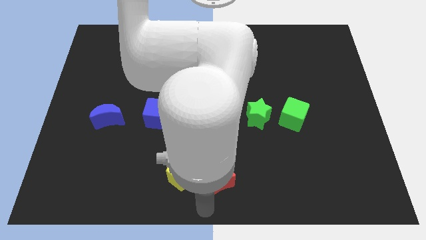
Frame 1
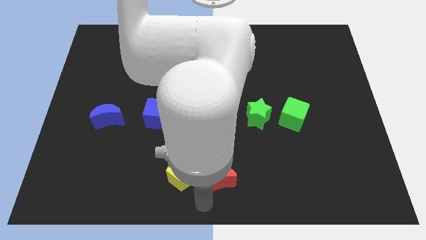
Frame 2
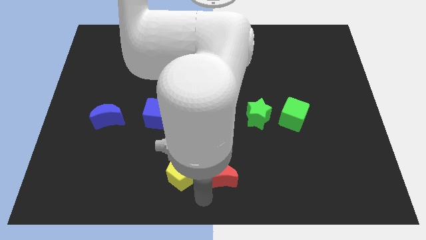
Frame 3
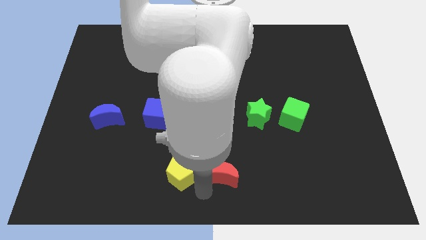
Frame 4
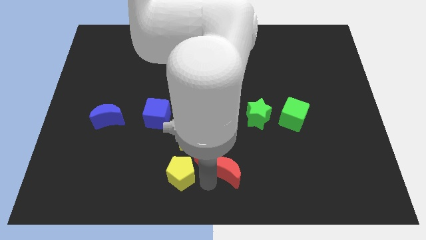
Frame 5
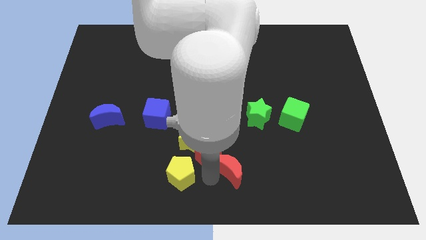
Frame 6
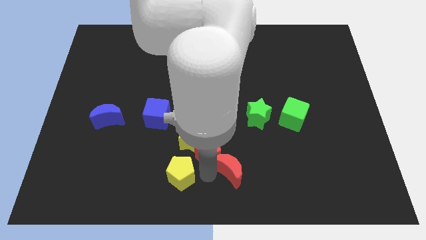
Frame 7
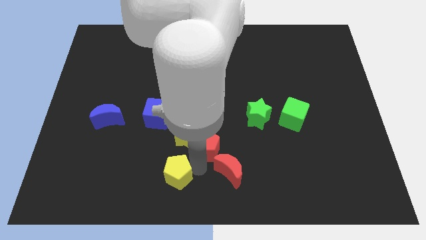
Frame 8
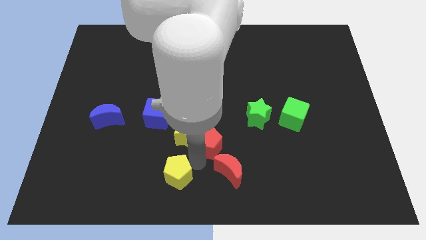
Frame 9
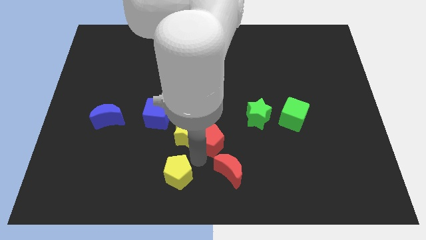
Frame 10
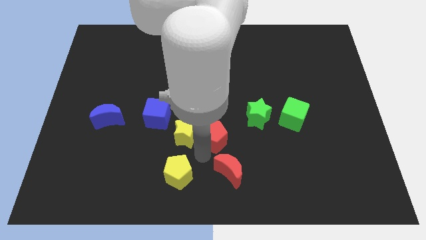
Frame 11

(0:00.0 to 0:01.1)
move your hand towards the red pentagon along with red crescent

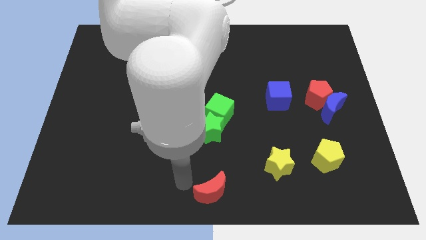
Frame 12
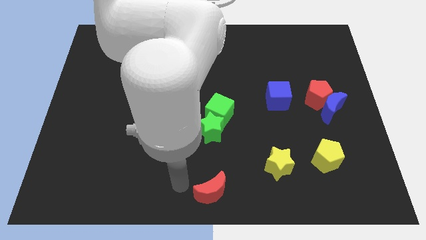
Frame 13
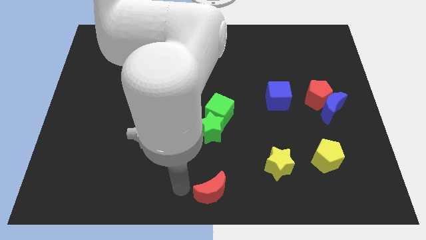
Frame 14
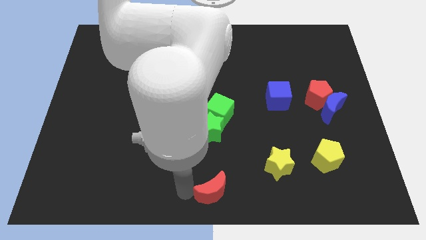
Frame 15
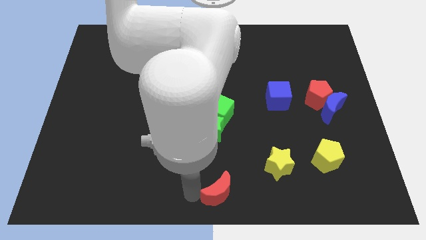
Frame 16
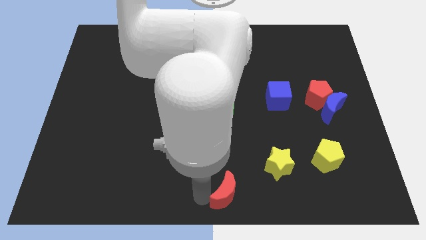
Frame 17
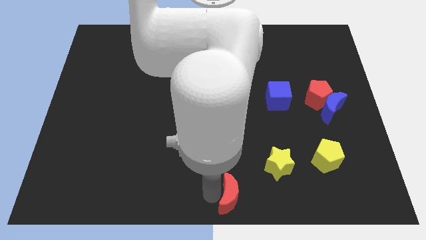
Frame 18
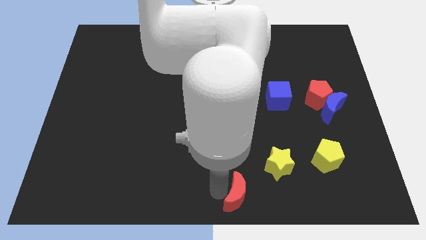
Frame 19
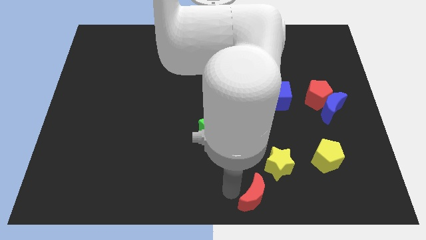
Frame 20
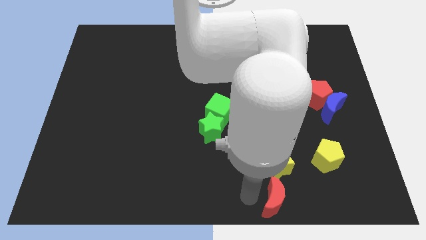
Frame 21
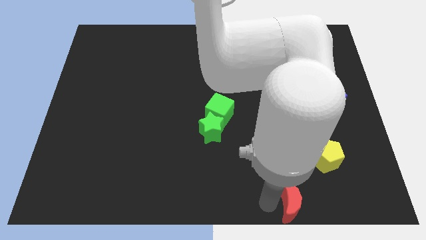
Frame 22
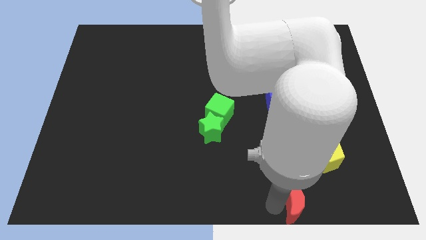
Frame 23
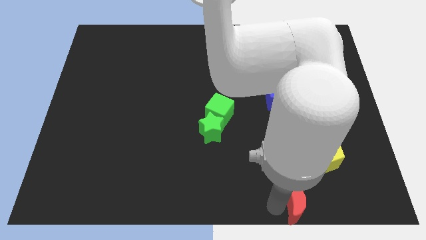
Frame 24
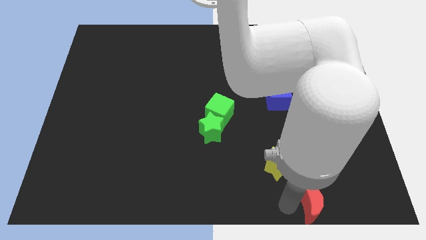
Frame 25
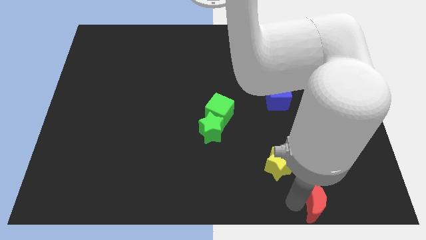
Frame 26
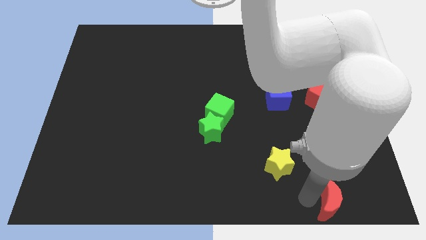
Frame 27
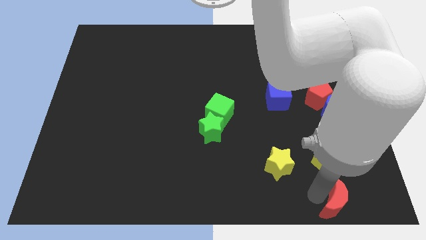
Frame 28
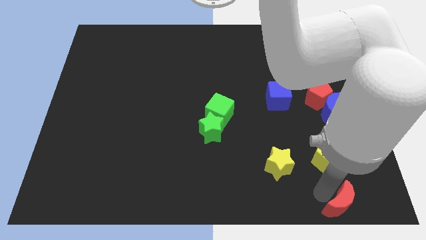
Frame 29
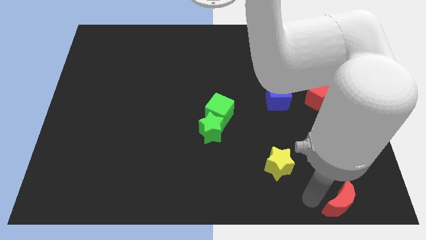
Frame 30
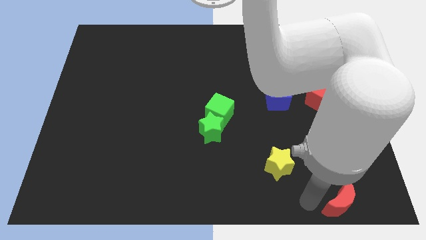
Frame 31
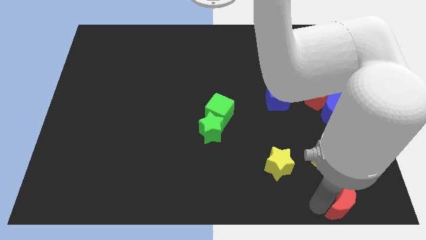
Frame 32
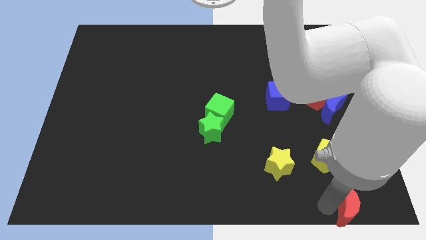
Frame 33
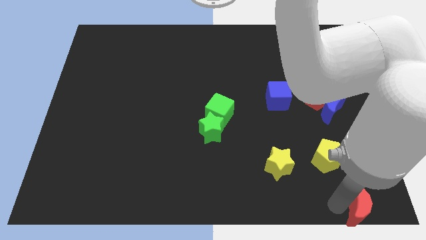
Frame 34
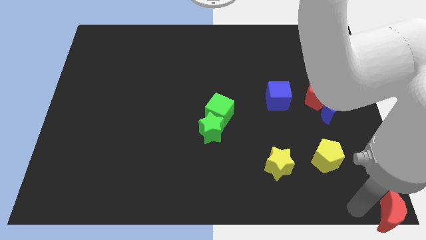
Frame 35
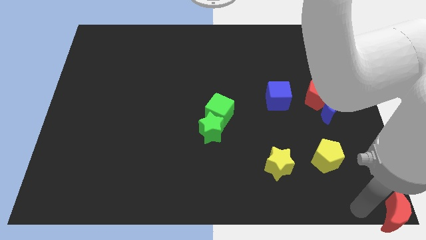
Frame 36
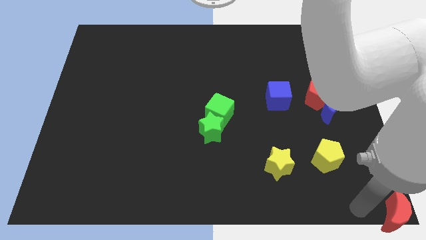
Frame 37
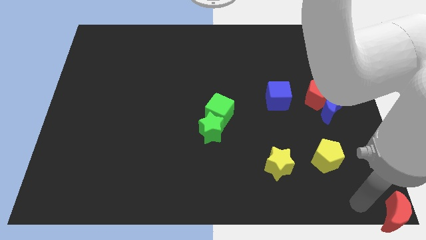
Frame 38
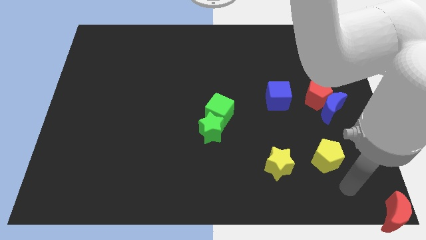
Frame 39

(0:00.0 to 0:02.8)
slide red crescent to bottom right

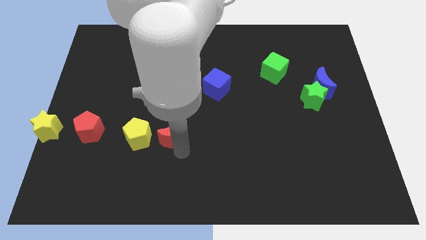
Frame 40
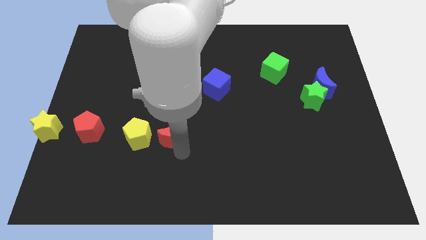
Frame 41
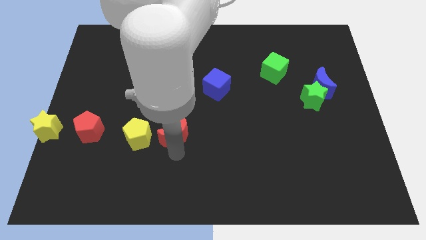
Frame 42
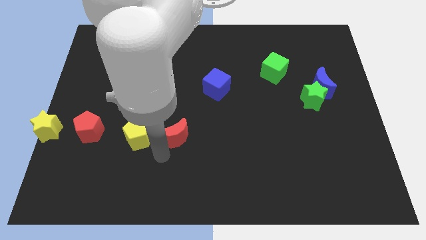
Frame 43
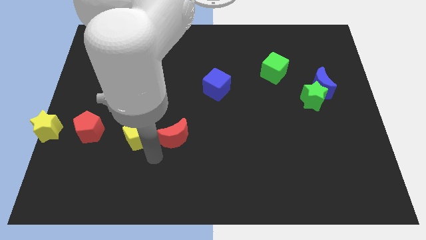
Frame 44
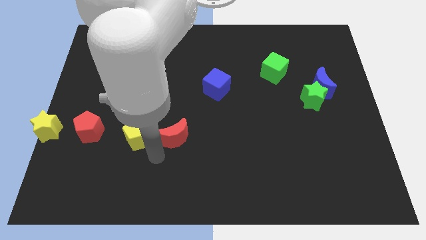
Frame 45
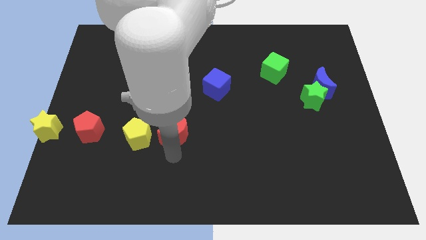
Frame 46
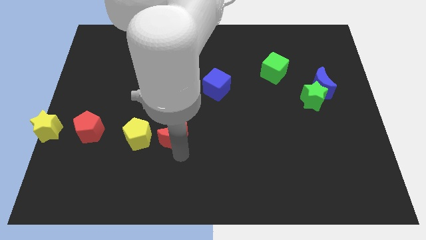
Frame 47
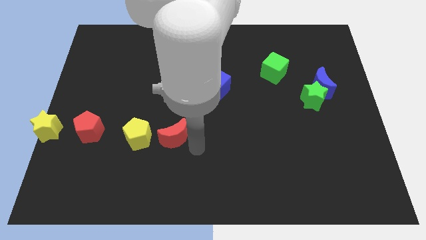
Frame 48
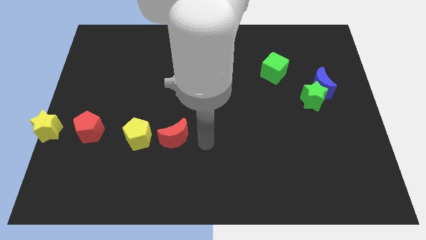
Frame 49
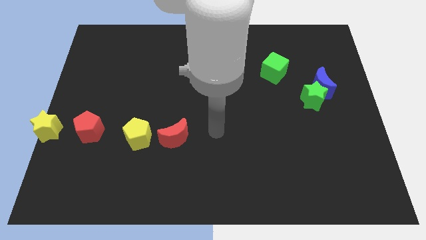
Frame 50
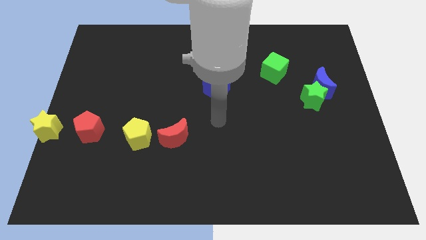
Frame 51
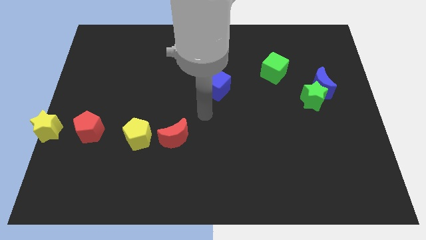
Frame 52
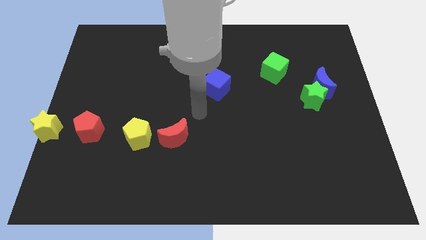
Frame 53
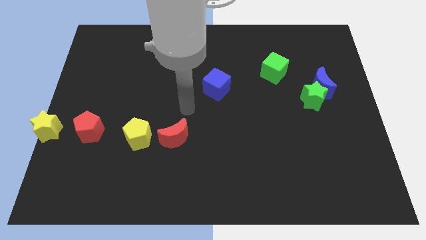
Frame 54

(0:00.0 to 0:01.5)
move your arm away from red moon

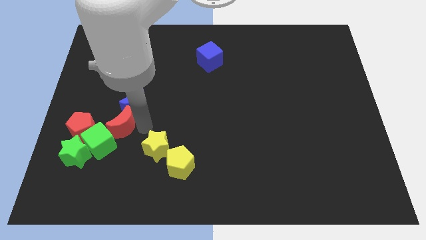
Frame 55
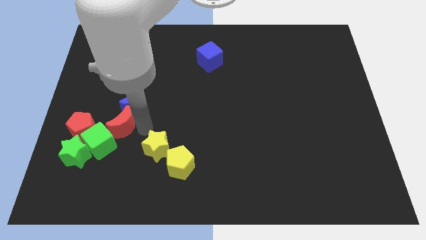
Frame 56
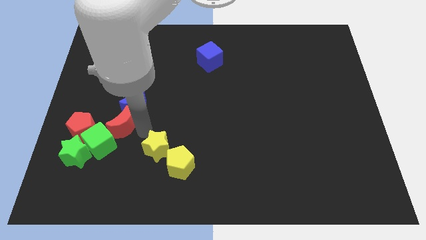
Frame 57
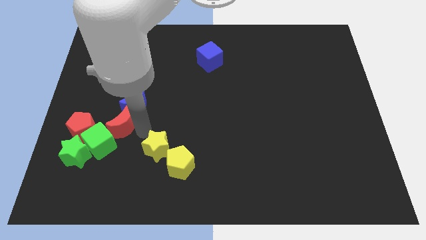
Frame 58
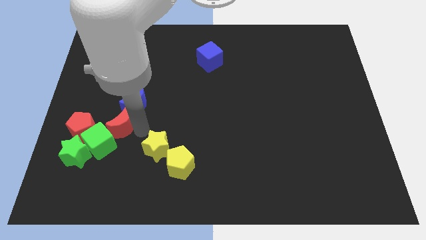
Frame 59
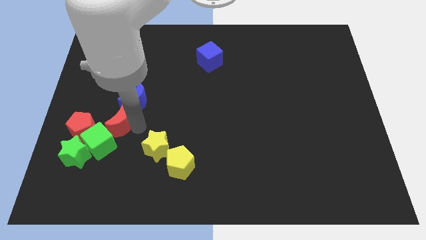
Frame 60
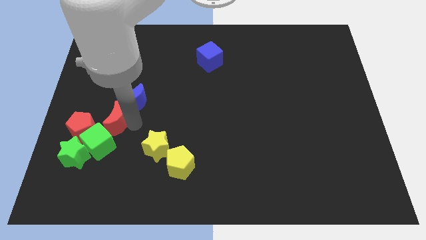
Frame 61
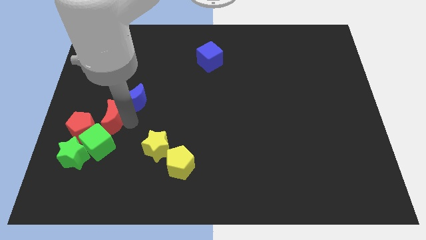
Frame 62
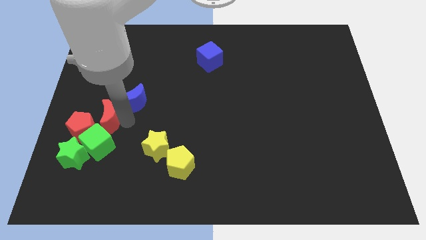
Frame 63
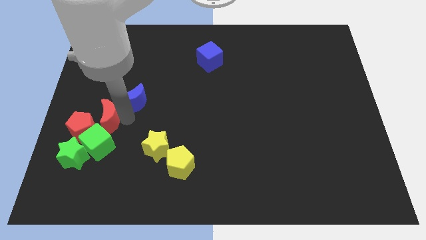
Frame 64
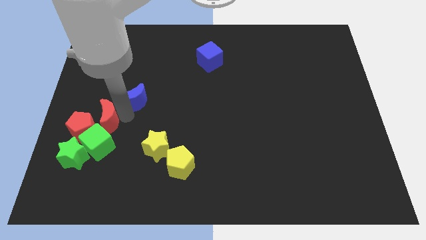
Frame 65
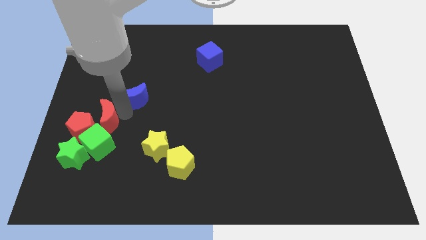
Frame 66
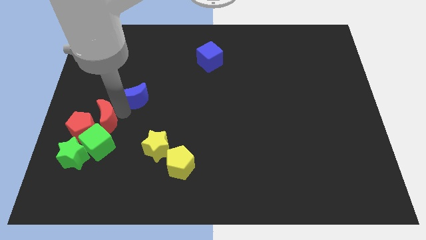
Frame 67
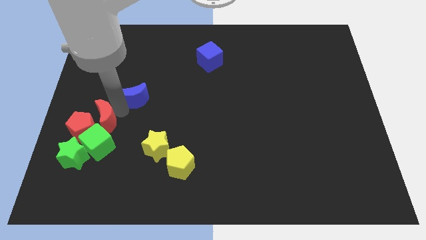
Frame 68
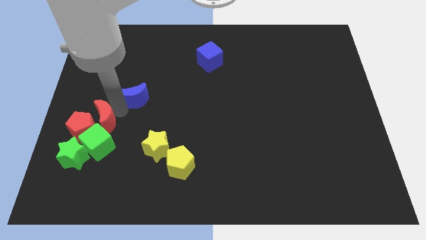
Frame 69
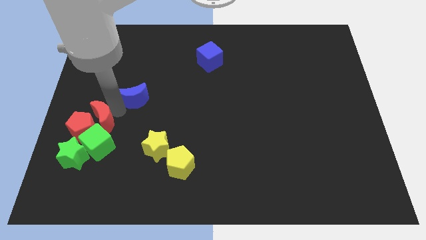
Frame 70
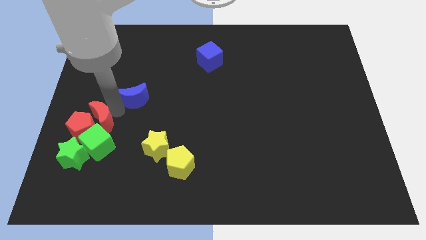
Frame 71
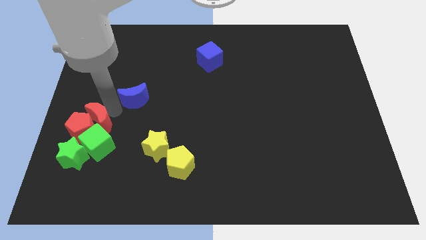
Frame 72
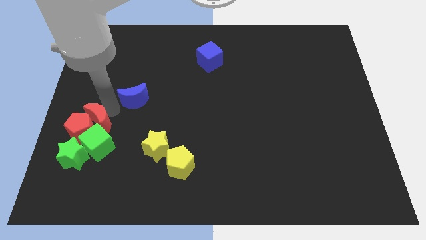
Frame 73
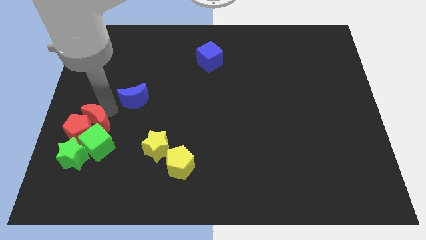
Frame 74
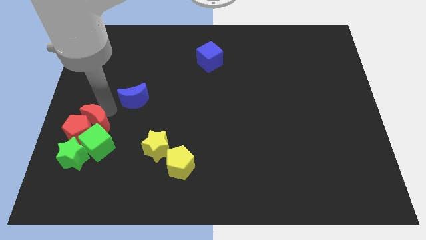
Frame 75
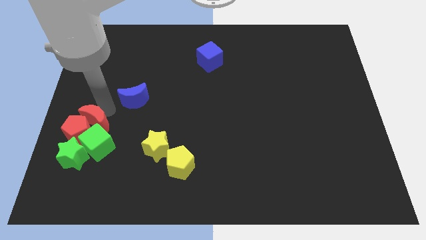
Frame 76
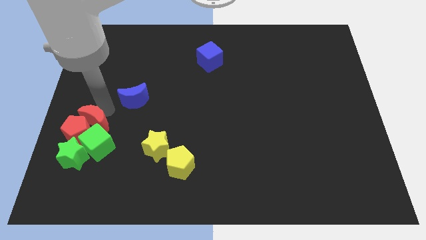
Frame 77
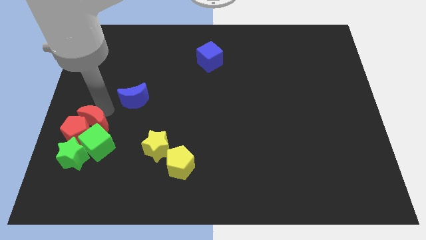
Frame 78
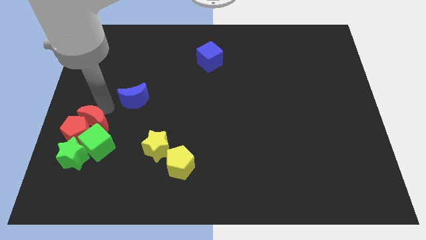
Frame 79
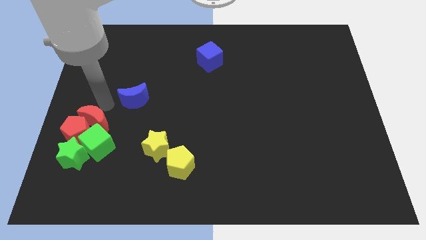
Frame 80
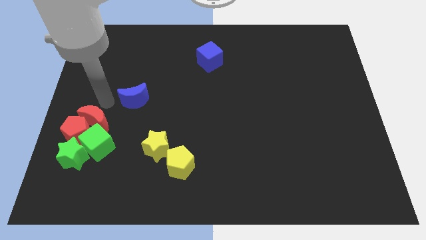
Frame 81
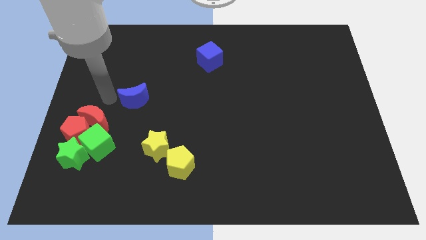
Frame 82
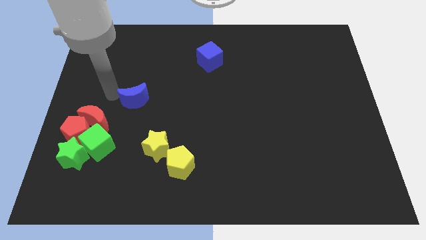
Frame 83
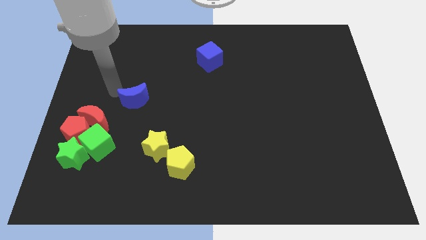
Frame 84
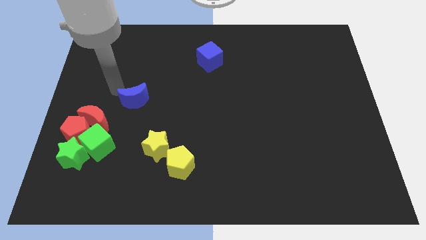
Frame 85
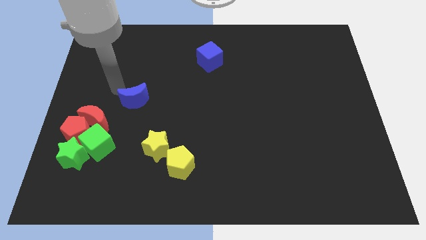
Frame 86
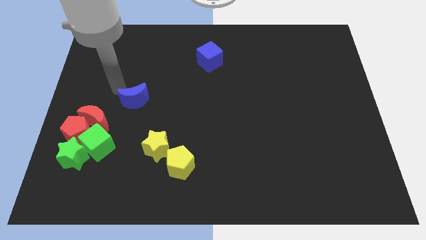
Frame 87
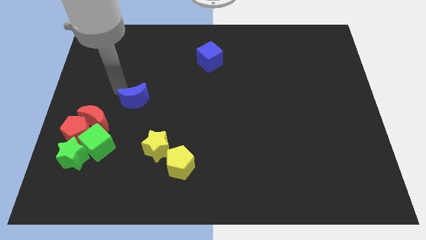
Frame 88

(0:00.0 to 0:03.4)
push the red crescent into the red pentagon and green cube

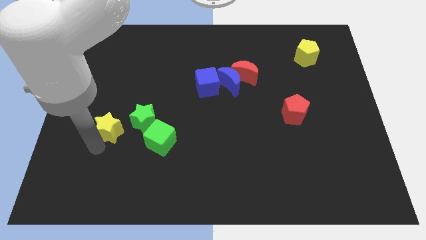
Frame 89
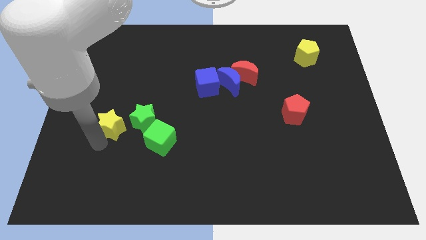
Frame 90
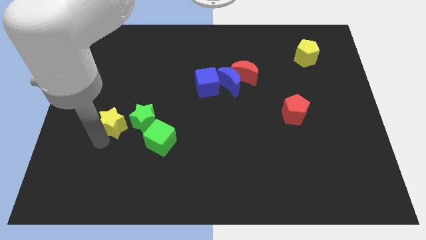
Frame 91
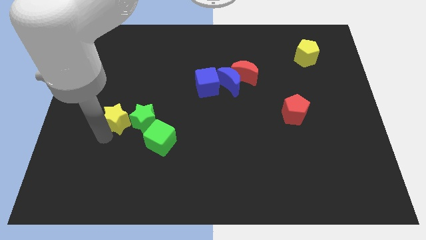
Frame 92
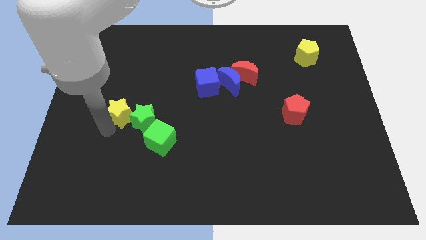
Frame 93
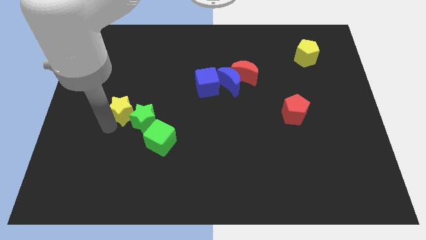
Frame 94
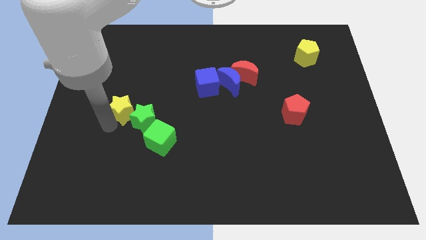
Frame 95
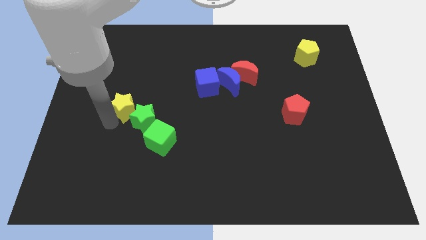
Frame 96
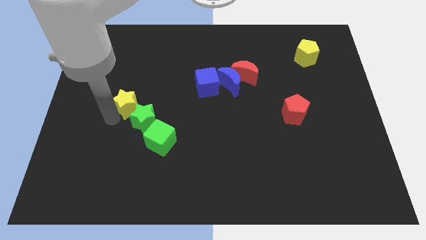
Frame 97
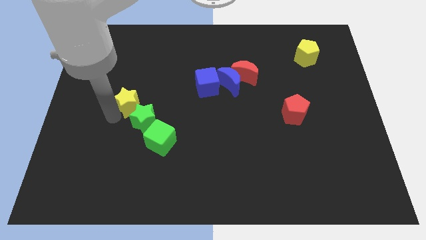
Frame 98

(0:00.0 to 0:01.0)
push the yellow star above the green star
